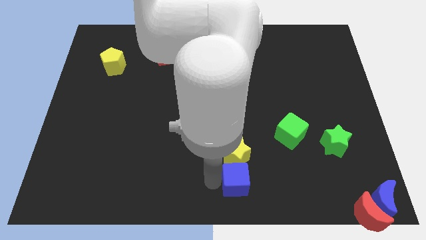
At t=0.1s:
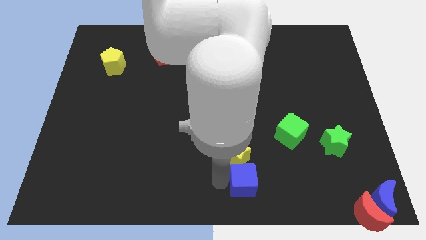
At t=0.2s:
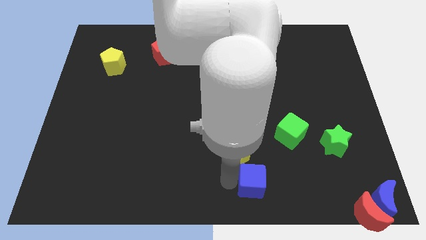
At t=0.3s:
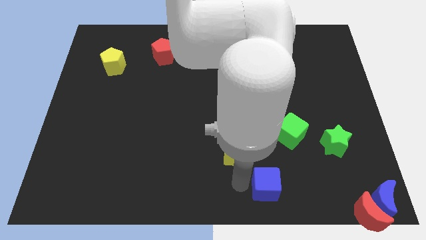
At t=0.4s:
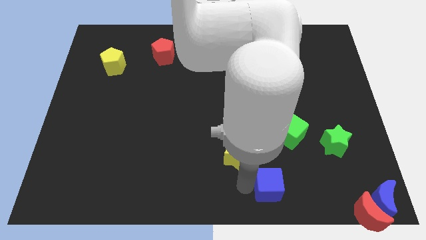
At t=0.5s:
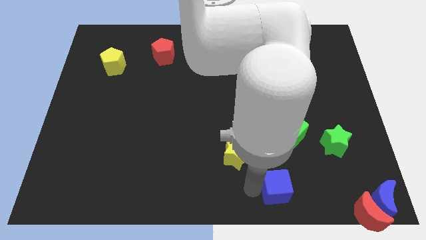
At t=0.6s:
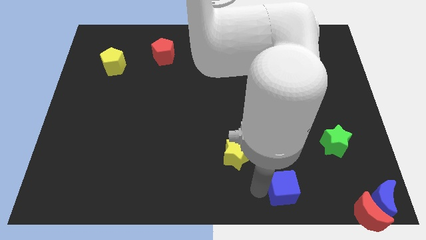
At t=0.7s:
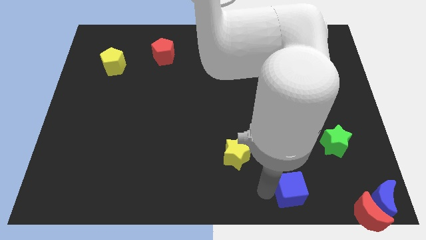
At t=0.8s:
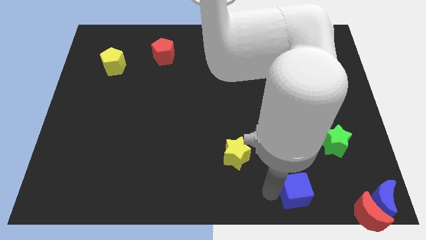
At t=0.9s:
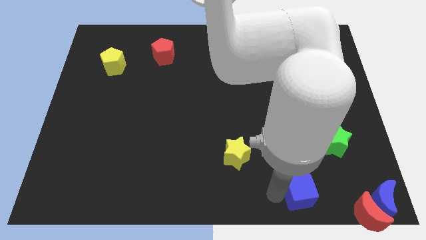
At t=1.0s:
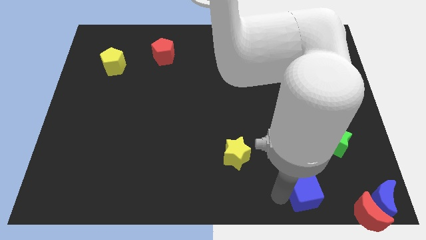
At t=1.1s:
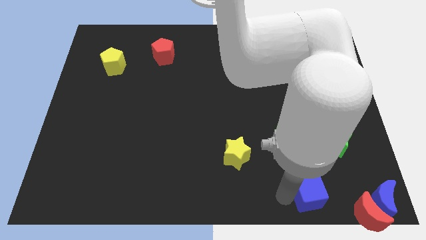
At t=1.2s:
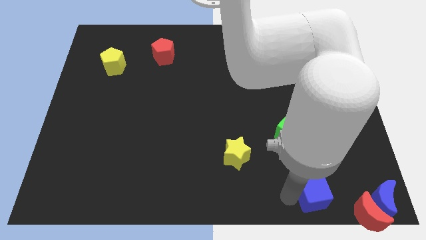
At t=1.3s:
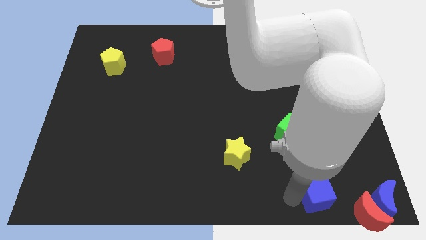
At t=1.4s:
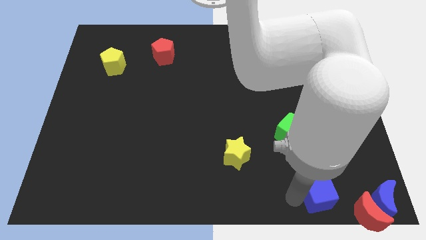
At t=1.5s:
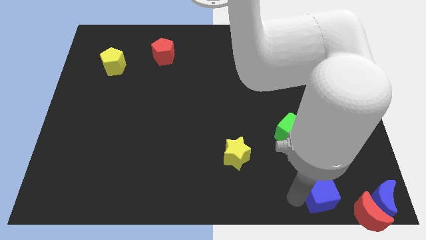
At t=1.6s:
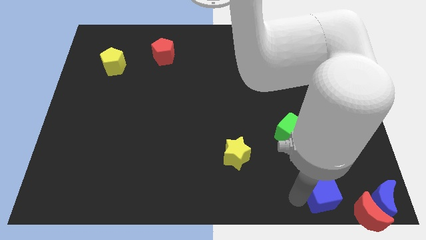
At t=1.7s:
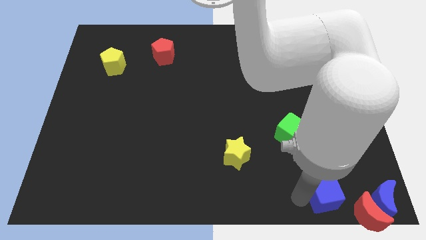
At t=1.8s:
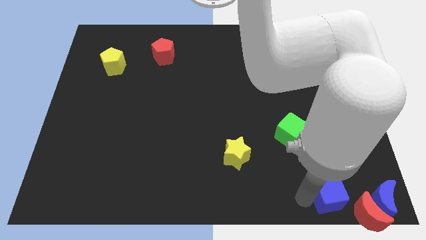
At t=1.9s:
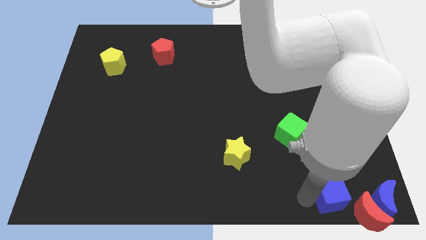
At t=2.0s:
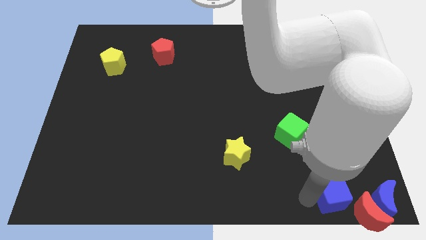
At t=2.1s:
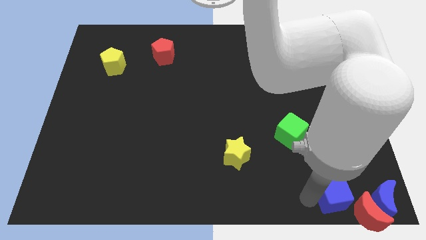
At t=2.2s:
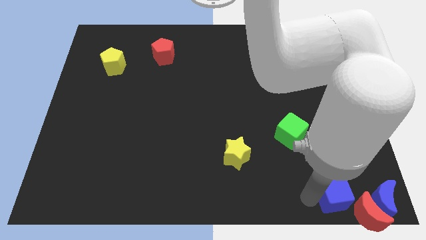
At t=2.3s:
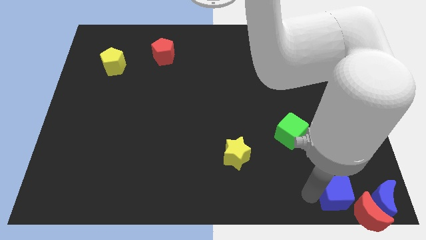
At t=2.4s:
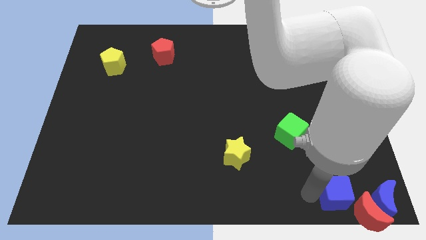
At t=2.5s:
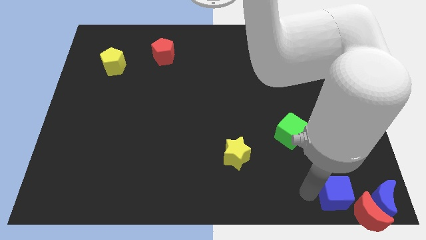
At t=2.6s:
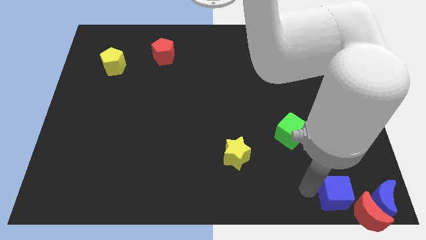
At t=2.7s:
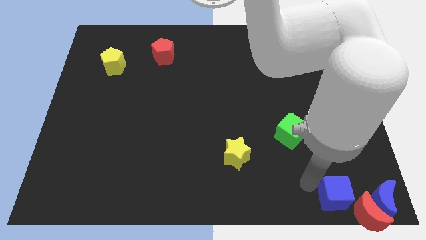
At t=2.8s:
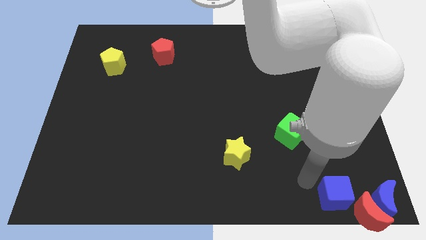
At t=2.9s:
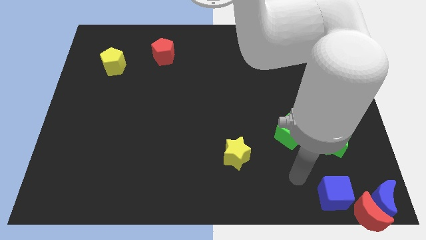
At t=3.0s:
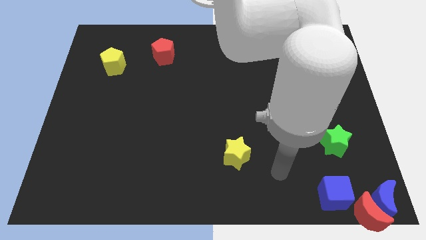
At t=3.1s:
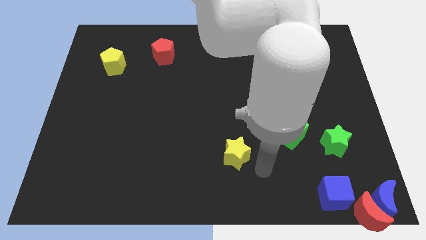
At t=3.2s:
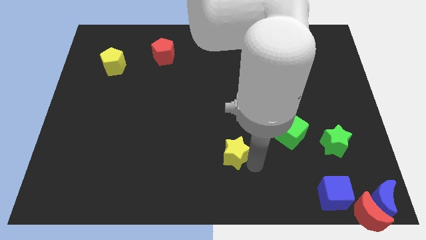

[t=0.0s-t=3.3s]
move the blue cube close to the red moon

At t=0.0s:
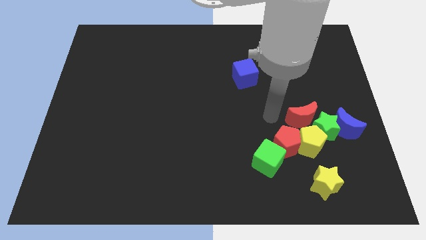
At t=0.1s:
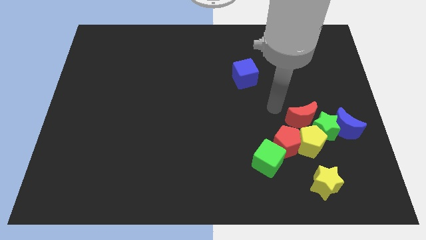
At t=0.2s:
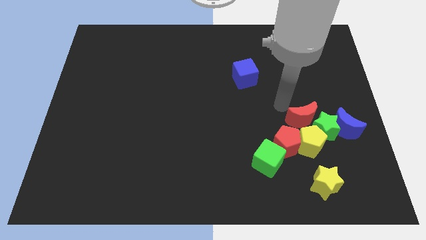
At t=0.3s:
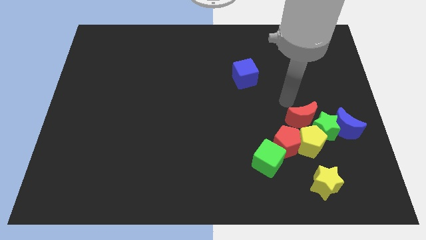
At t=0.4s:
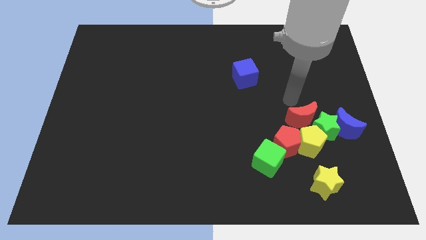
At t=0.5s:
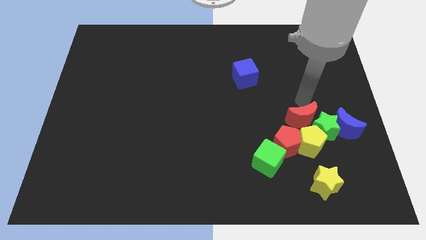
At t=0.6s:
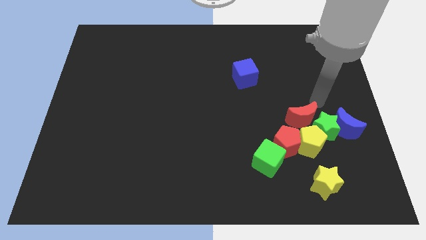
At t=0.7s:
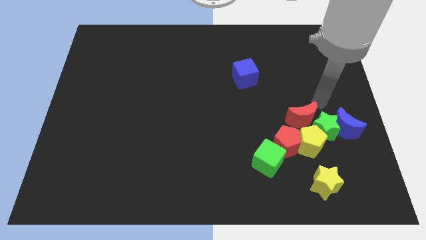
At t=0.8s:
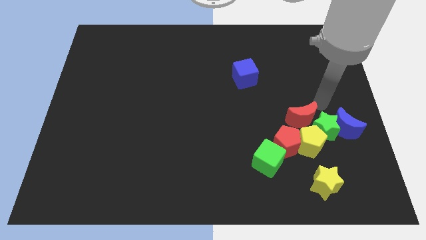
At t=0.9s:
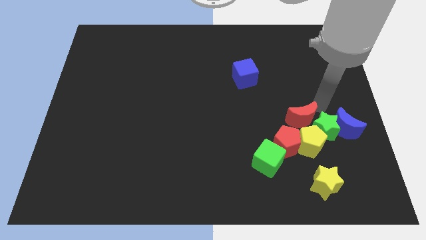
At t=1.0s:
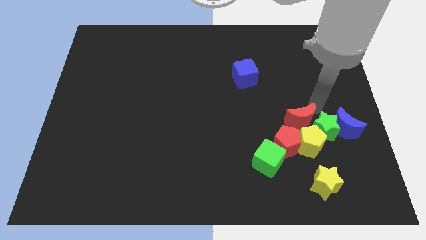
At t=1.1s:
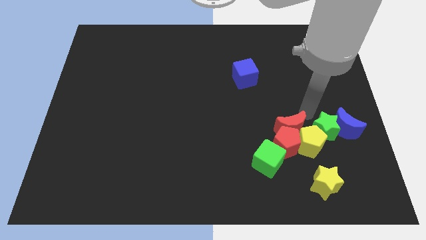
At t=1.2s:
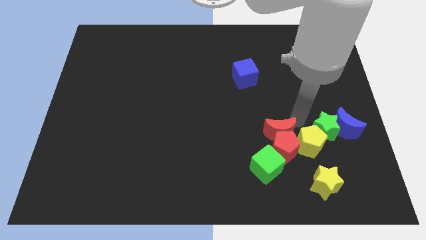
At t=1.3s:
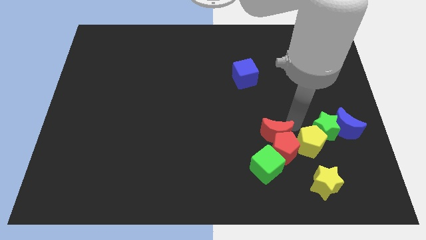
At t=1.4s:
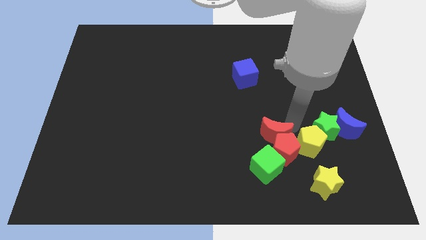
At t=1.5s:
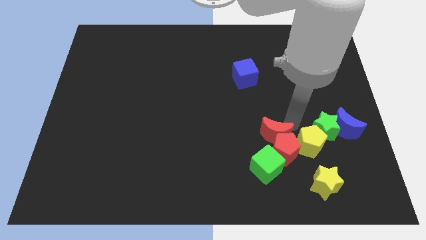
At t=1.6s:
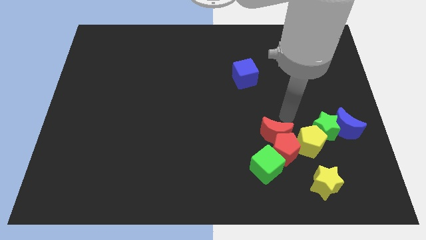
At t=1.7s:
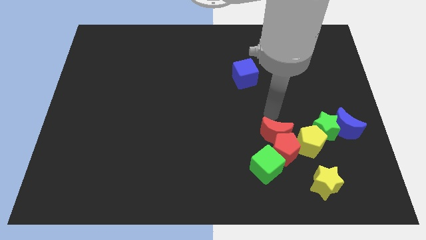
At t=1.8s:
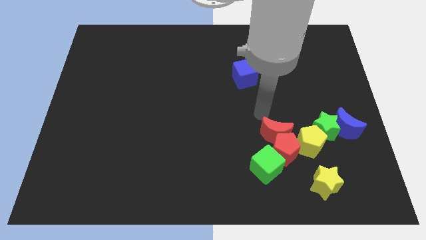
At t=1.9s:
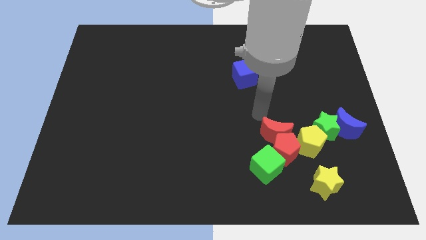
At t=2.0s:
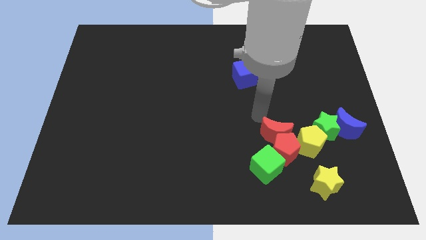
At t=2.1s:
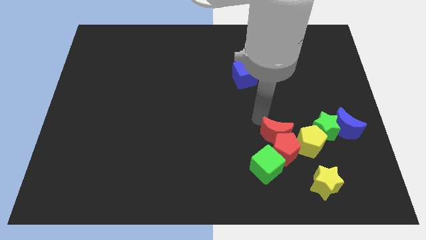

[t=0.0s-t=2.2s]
place the red moon above the red pentagon

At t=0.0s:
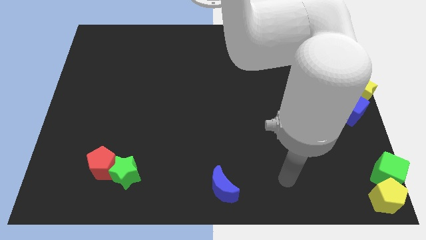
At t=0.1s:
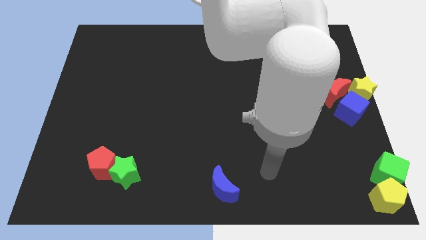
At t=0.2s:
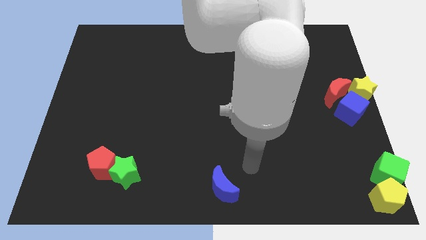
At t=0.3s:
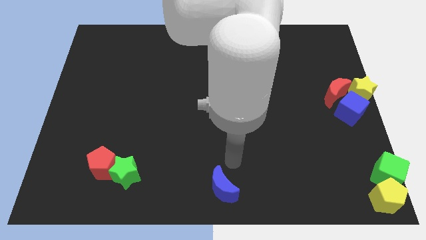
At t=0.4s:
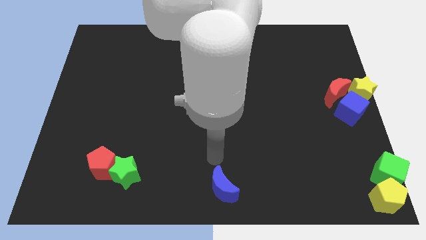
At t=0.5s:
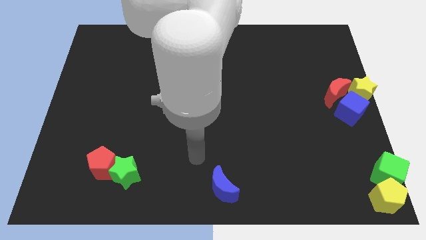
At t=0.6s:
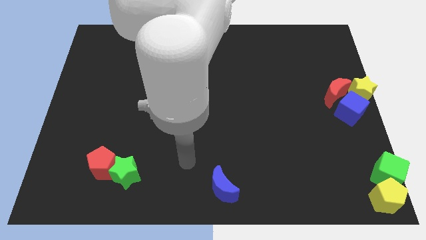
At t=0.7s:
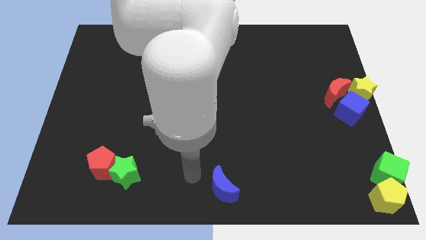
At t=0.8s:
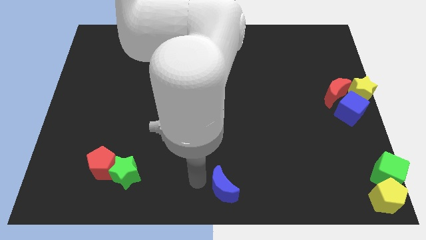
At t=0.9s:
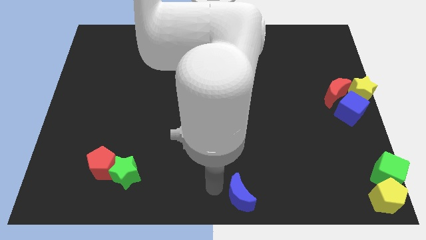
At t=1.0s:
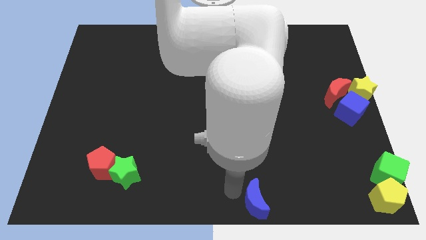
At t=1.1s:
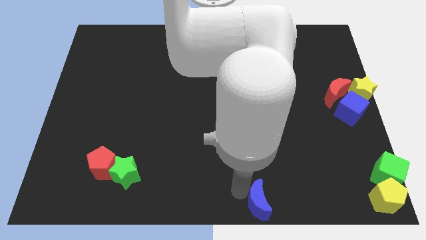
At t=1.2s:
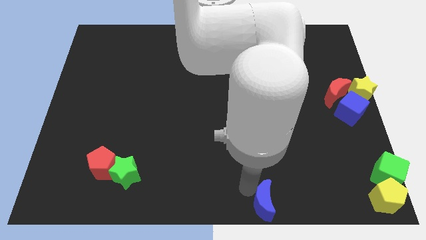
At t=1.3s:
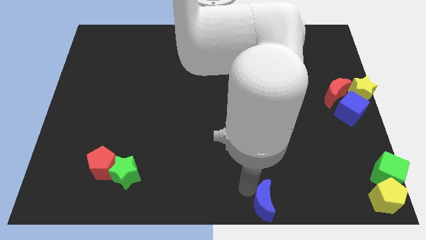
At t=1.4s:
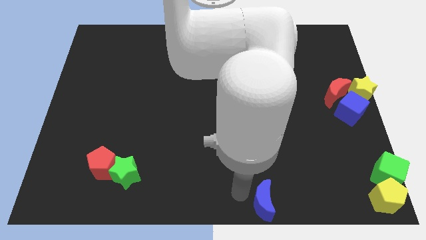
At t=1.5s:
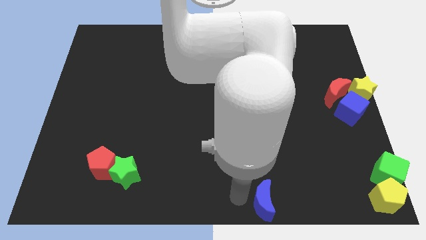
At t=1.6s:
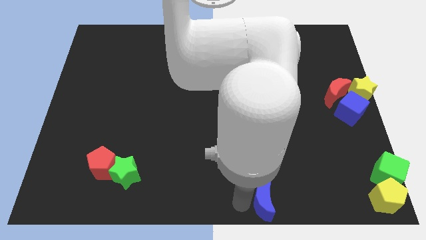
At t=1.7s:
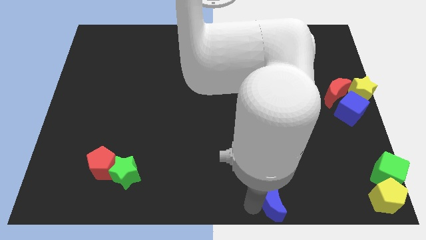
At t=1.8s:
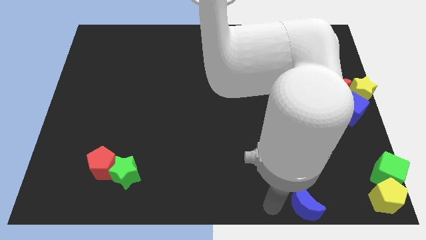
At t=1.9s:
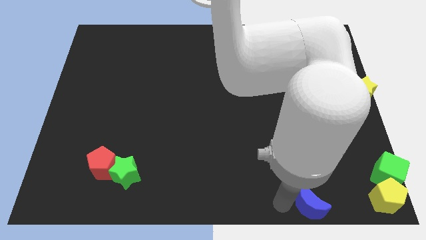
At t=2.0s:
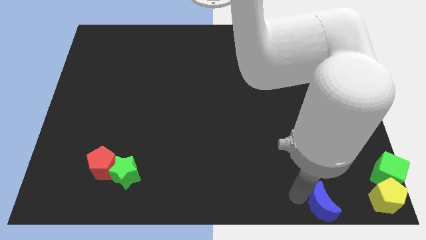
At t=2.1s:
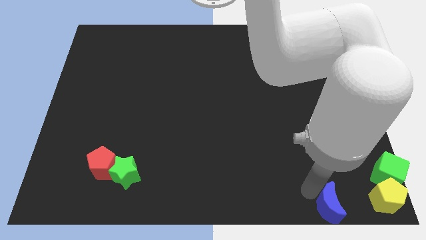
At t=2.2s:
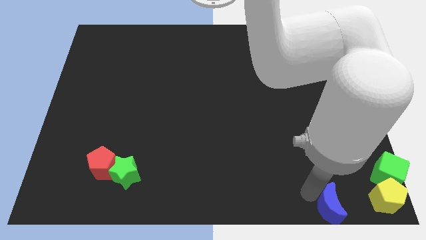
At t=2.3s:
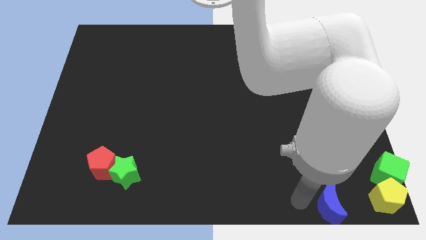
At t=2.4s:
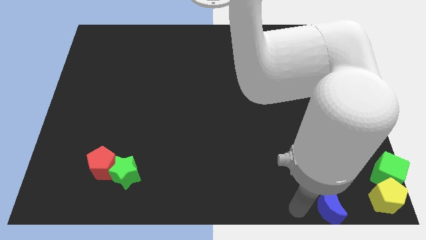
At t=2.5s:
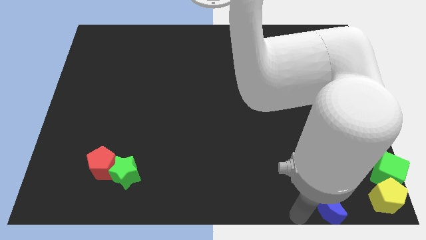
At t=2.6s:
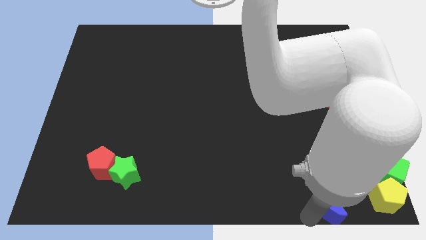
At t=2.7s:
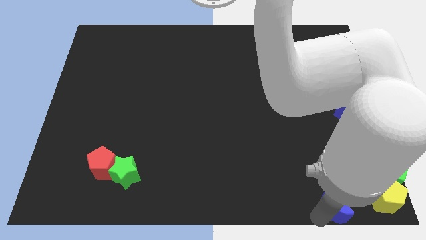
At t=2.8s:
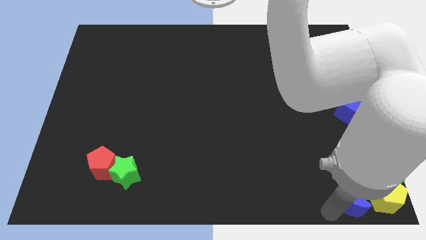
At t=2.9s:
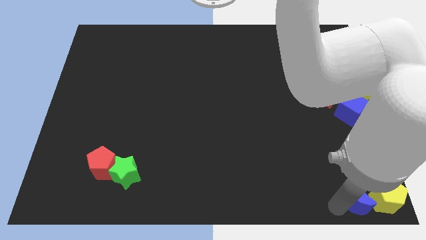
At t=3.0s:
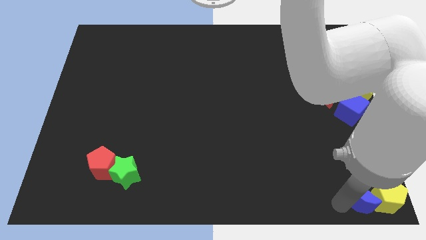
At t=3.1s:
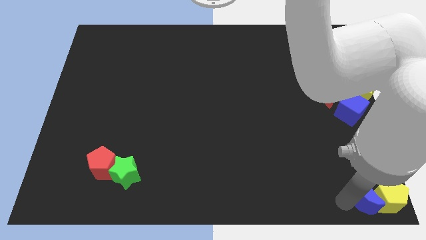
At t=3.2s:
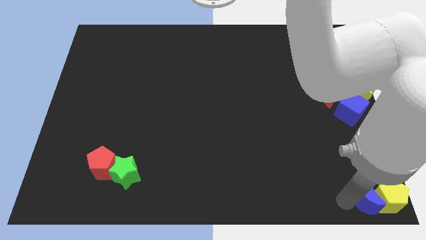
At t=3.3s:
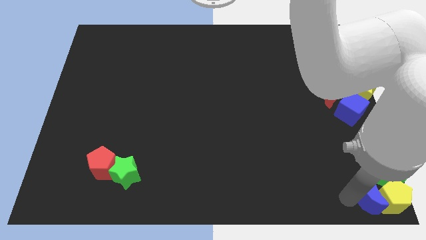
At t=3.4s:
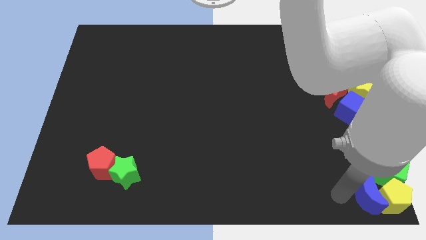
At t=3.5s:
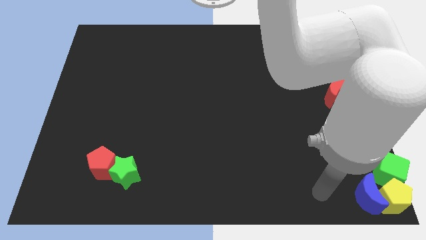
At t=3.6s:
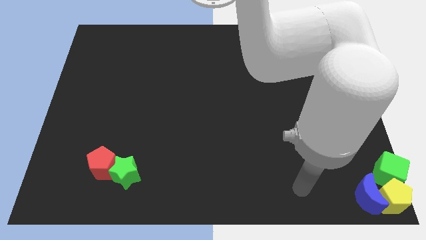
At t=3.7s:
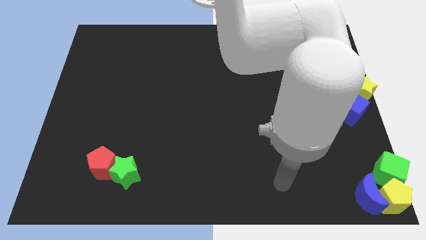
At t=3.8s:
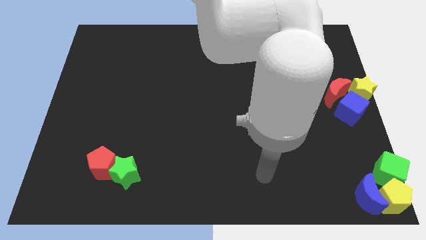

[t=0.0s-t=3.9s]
move the blue crescent into the green cube and yellow pentagon
